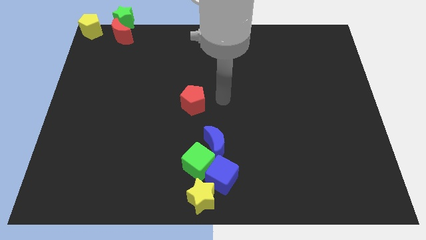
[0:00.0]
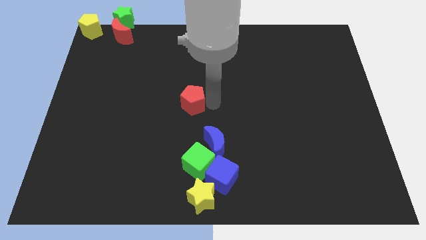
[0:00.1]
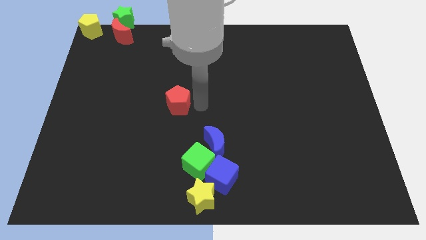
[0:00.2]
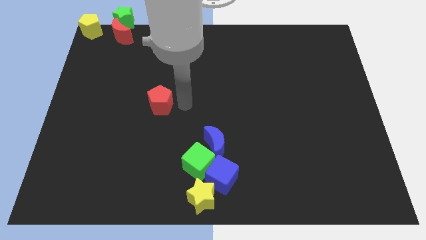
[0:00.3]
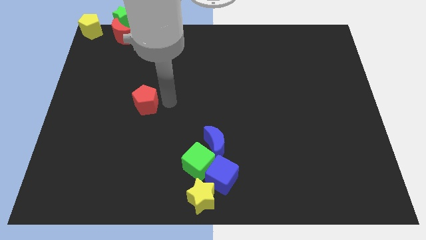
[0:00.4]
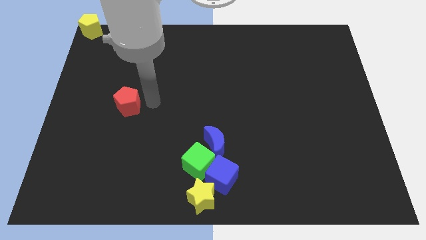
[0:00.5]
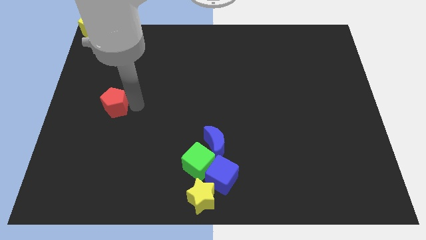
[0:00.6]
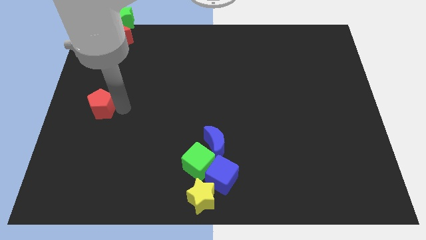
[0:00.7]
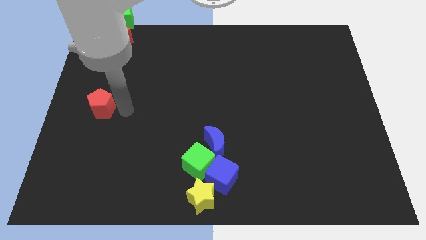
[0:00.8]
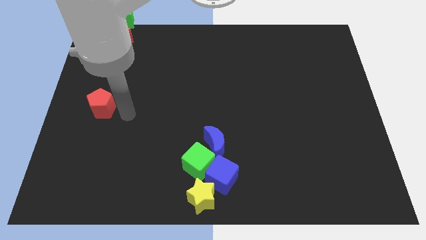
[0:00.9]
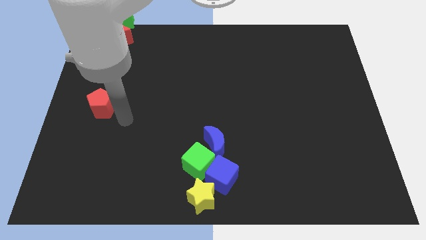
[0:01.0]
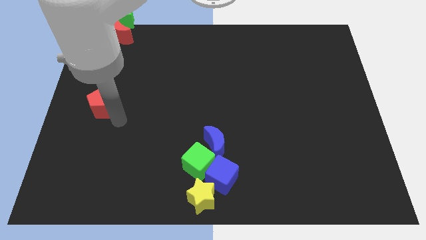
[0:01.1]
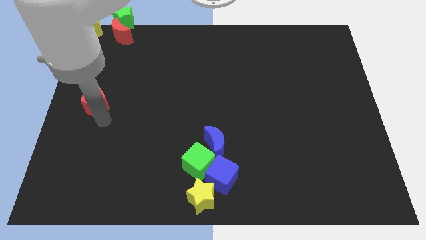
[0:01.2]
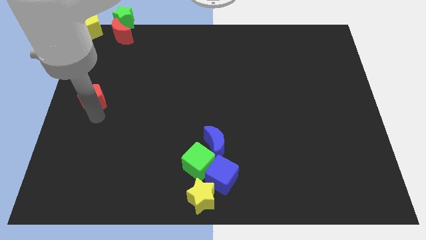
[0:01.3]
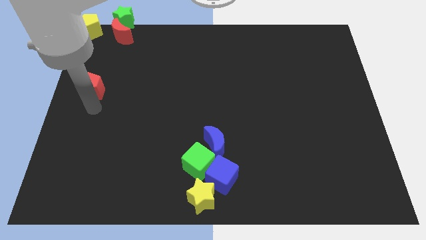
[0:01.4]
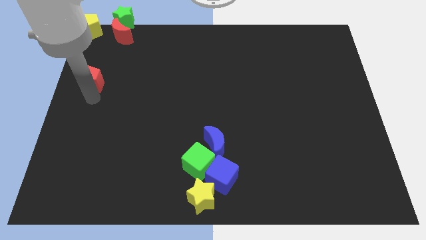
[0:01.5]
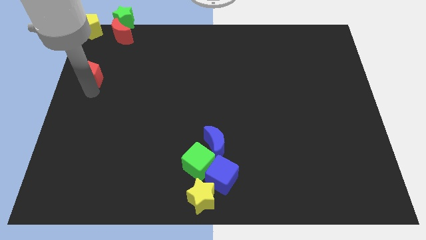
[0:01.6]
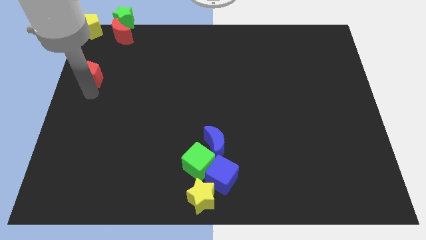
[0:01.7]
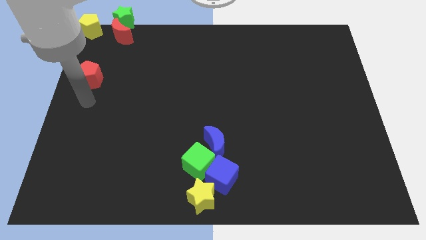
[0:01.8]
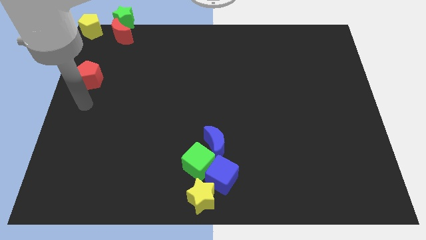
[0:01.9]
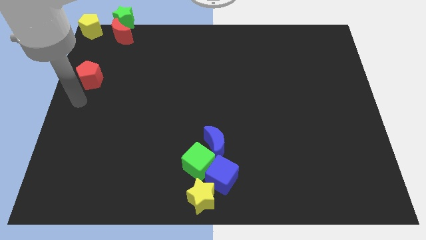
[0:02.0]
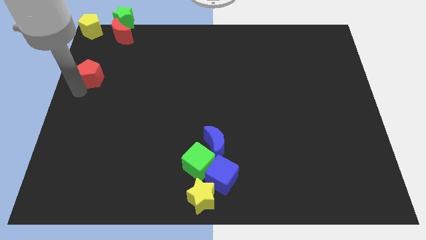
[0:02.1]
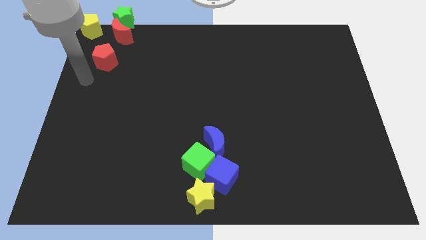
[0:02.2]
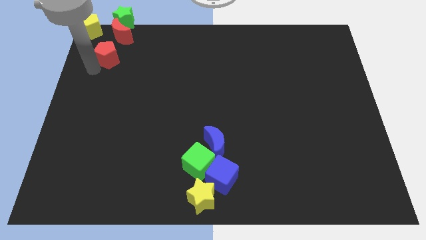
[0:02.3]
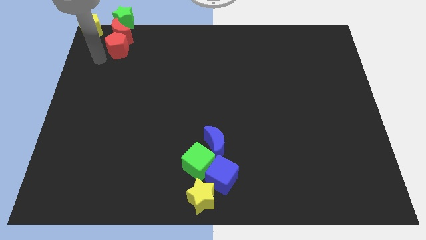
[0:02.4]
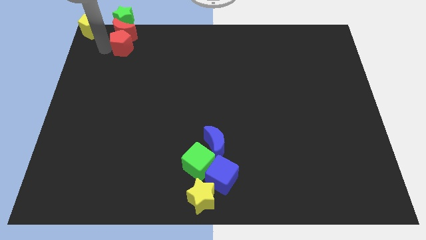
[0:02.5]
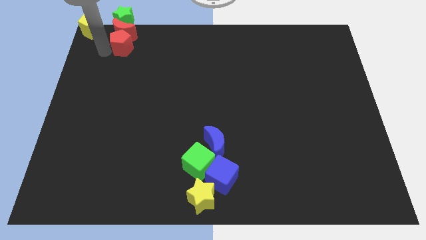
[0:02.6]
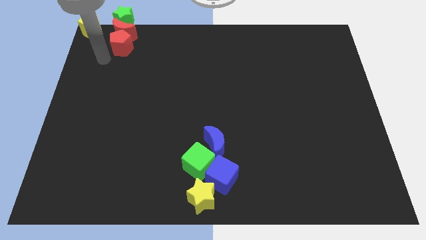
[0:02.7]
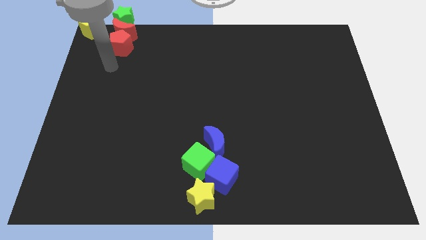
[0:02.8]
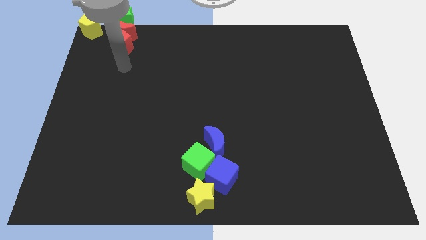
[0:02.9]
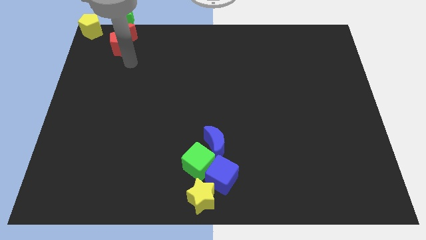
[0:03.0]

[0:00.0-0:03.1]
move the red pentagon to the bottom of the red crescent

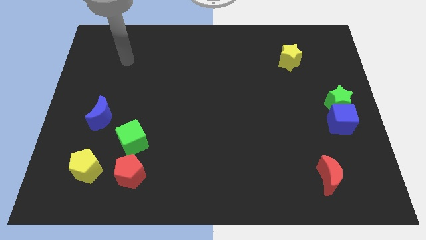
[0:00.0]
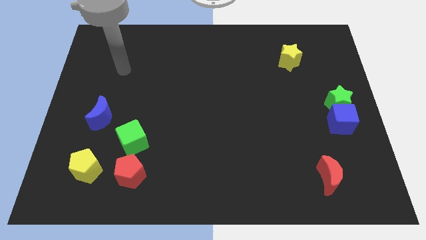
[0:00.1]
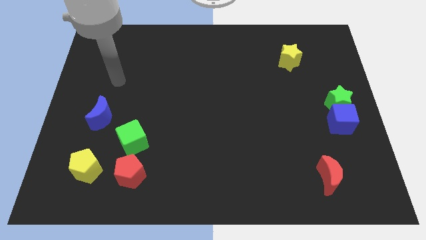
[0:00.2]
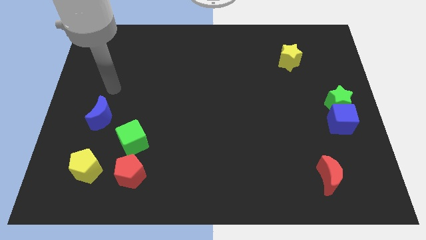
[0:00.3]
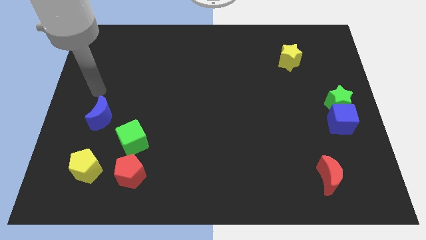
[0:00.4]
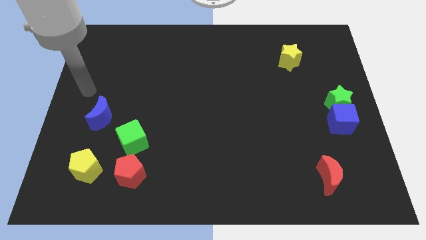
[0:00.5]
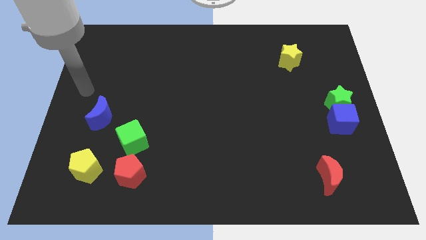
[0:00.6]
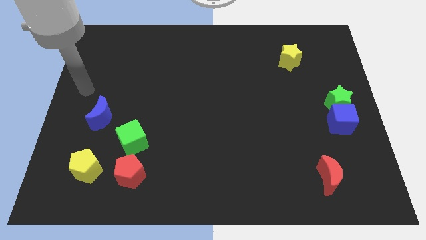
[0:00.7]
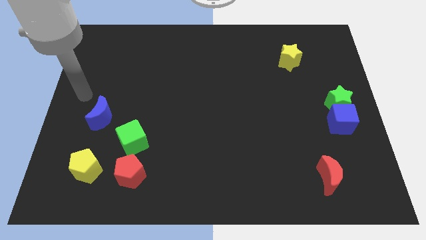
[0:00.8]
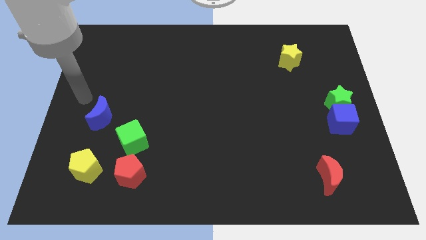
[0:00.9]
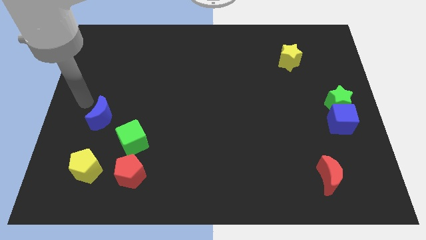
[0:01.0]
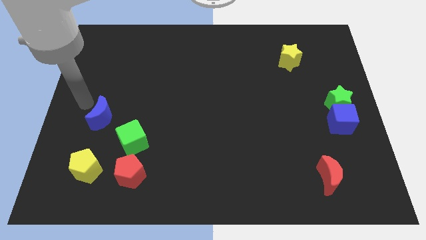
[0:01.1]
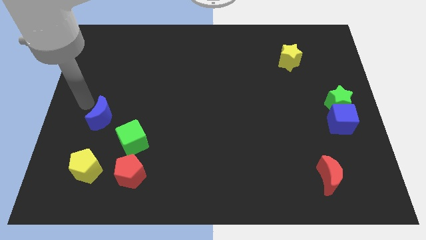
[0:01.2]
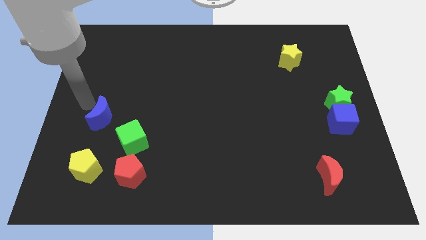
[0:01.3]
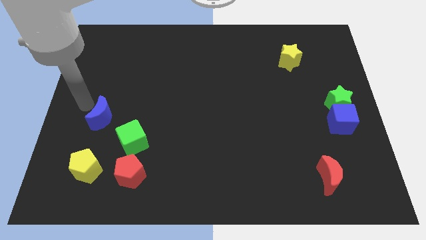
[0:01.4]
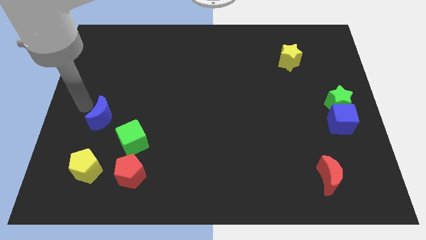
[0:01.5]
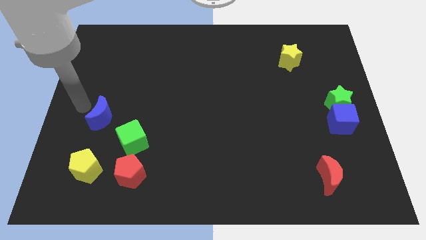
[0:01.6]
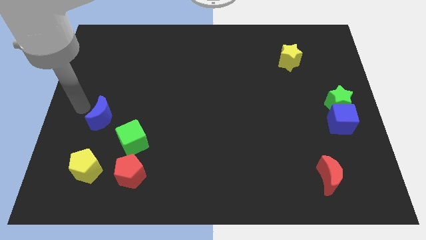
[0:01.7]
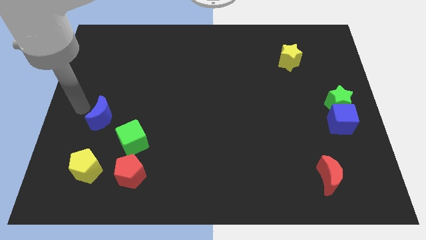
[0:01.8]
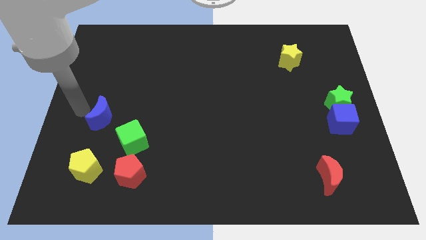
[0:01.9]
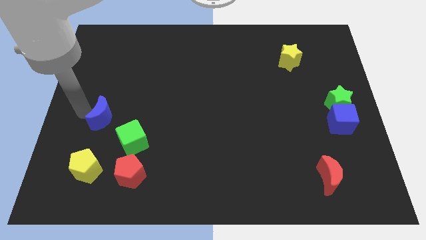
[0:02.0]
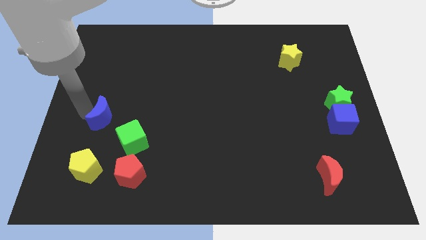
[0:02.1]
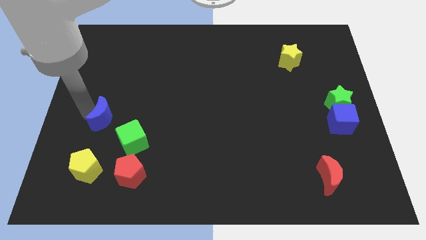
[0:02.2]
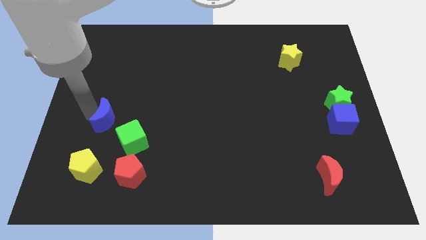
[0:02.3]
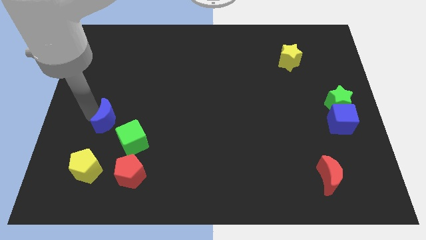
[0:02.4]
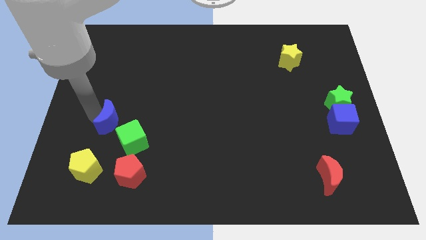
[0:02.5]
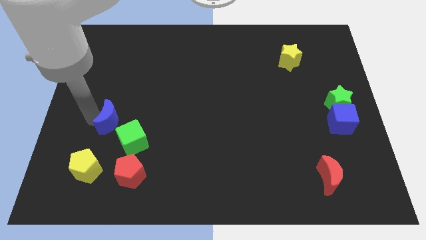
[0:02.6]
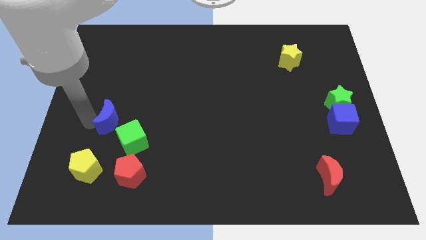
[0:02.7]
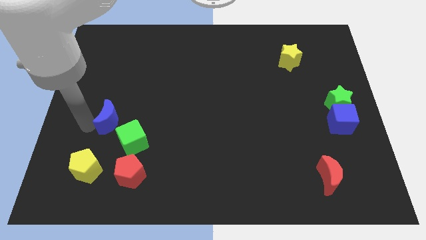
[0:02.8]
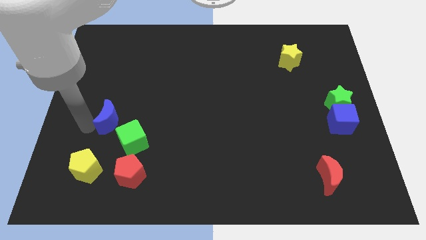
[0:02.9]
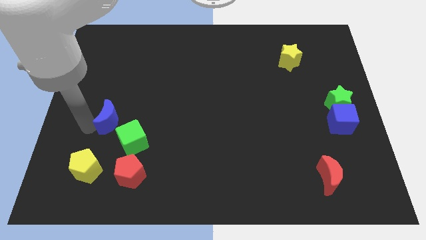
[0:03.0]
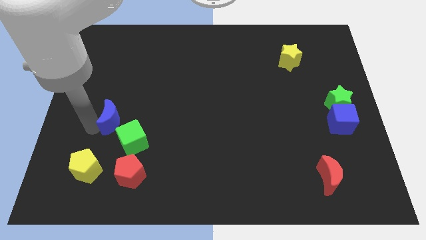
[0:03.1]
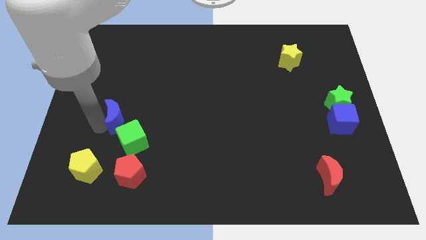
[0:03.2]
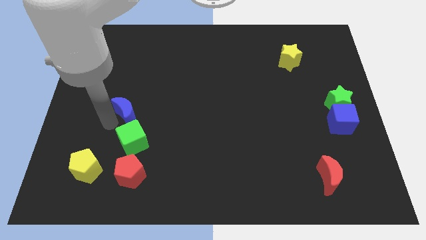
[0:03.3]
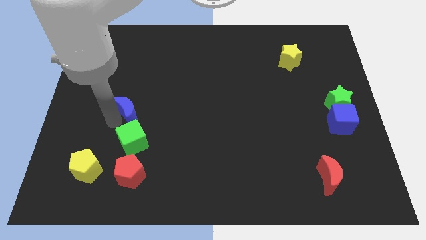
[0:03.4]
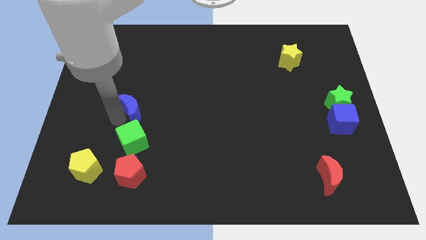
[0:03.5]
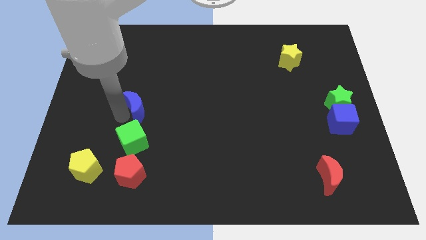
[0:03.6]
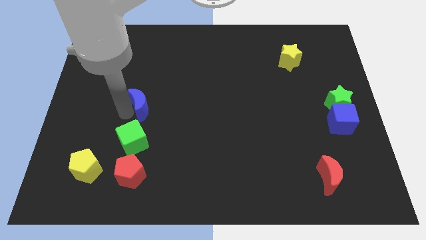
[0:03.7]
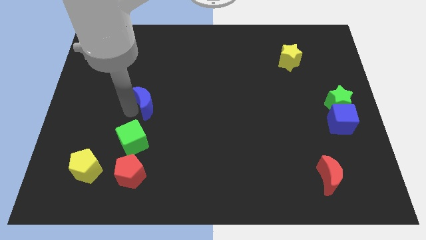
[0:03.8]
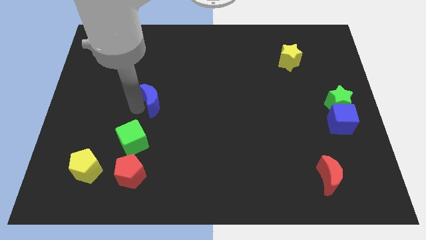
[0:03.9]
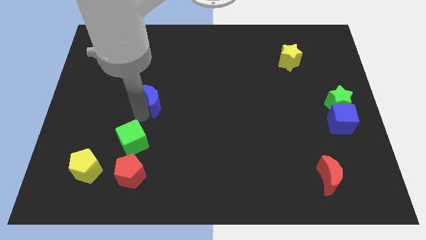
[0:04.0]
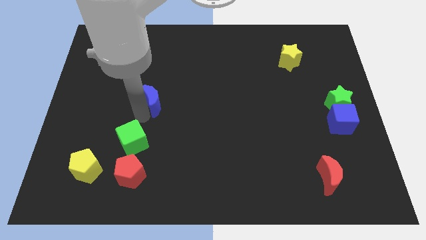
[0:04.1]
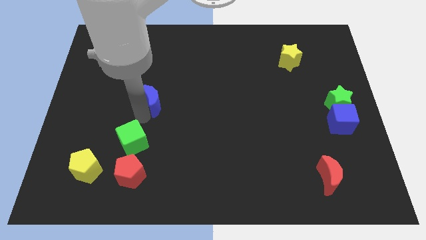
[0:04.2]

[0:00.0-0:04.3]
move the blue moon slightly to the right

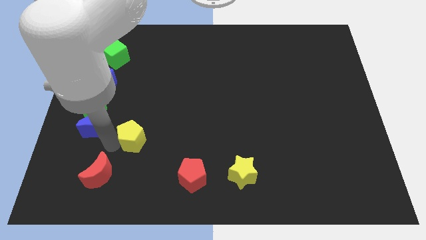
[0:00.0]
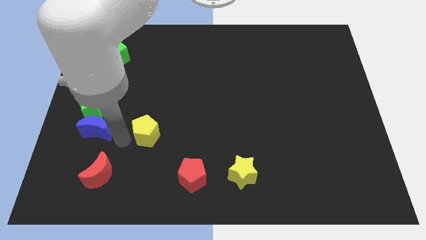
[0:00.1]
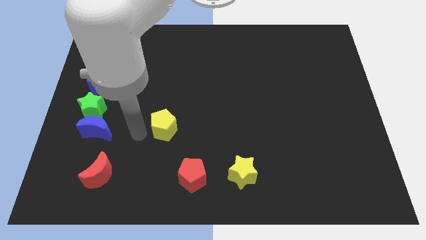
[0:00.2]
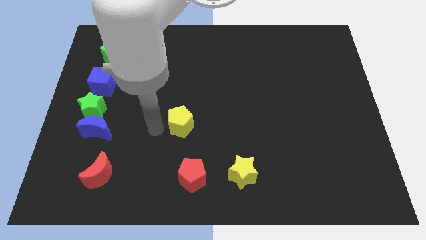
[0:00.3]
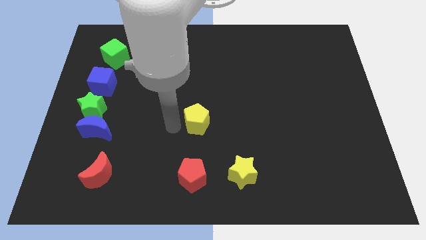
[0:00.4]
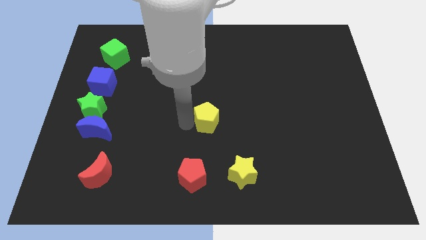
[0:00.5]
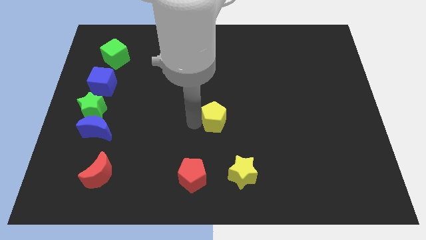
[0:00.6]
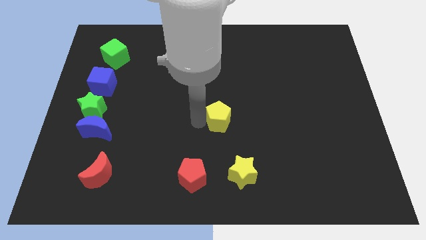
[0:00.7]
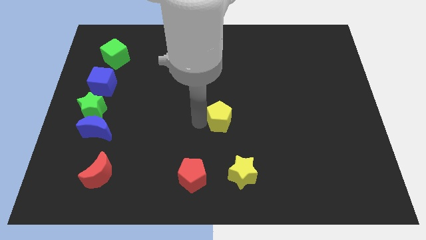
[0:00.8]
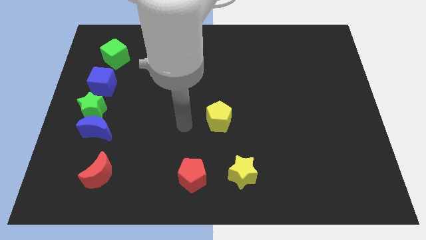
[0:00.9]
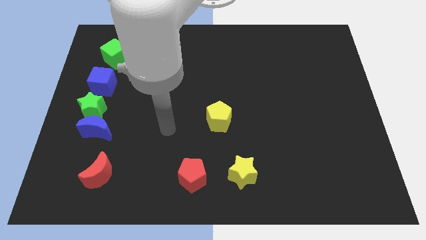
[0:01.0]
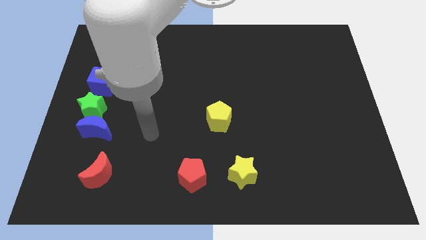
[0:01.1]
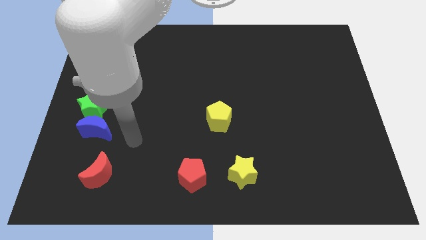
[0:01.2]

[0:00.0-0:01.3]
place the yellow pentagon diagonally to the top right of the red pentagon

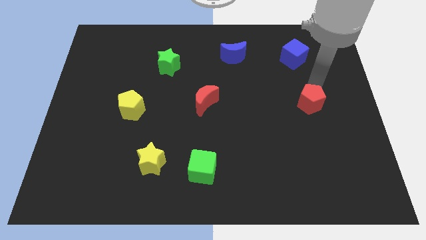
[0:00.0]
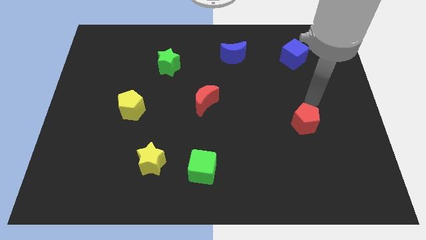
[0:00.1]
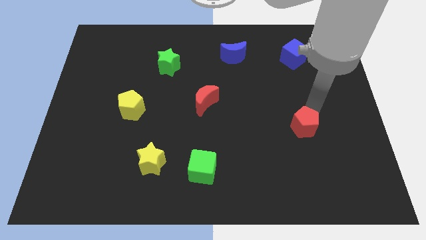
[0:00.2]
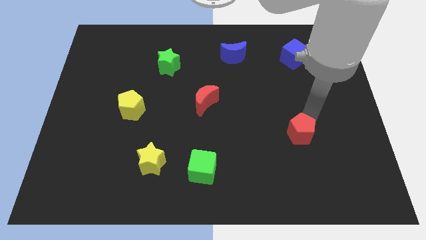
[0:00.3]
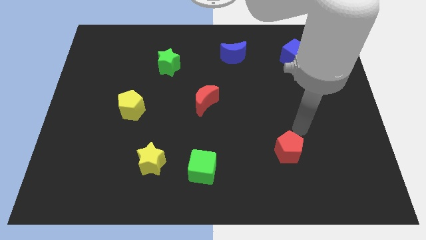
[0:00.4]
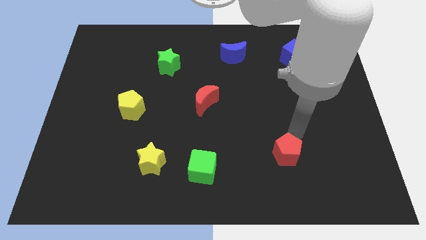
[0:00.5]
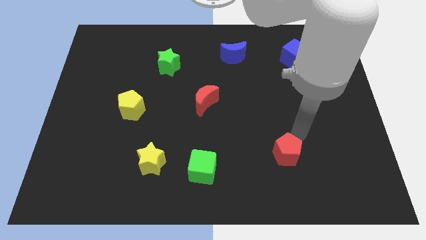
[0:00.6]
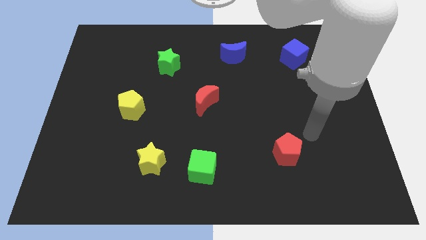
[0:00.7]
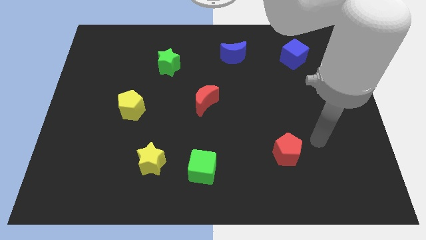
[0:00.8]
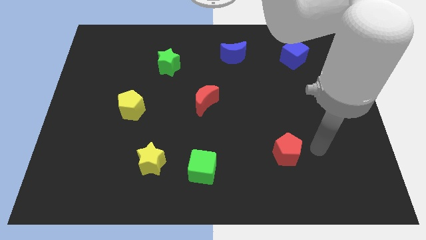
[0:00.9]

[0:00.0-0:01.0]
push red pentagon slightly towards down
